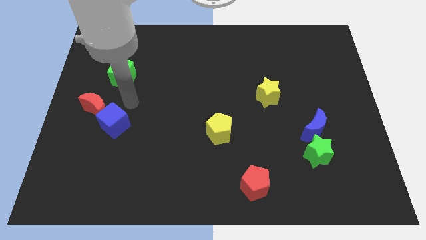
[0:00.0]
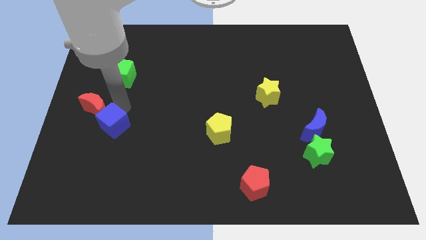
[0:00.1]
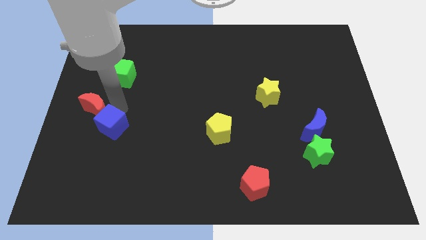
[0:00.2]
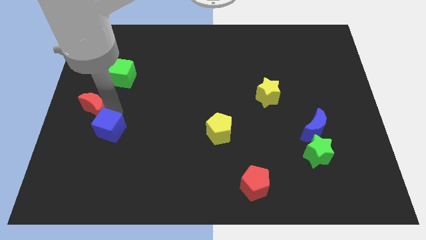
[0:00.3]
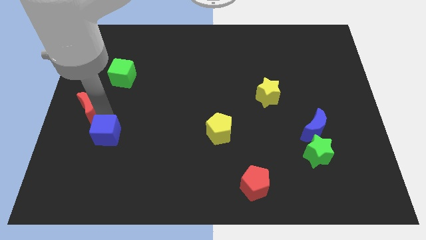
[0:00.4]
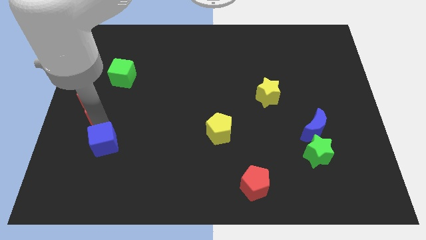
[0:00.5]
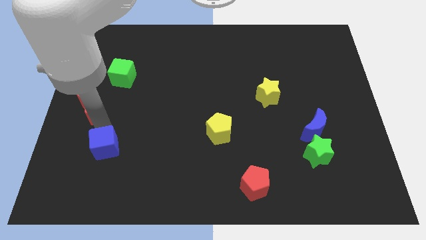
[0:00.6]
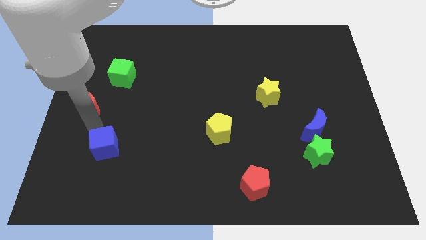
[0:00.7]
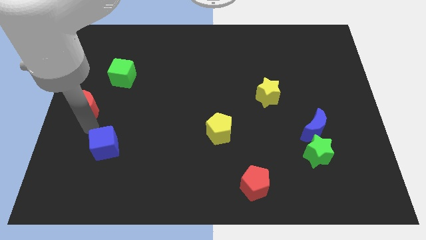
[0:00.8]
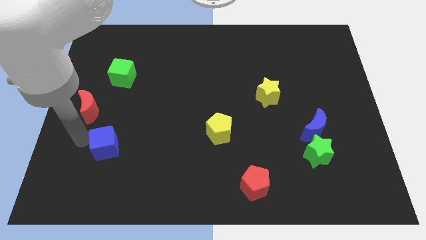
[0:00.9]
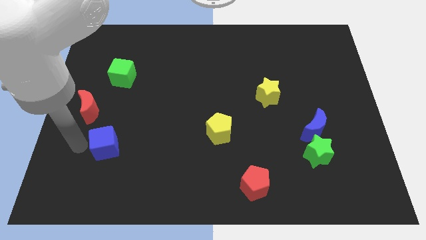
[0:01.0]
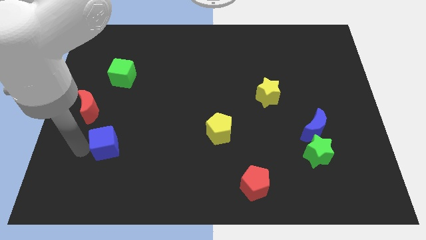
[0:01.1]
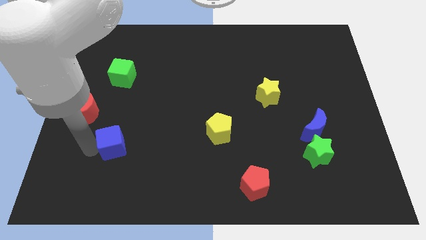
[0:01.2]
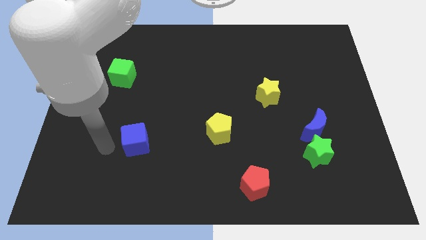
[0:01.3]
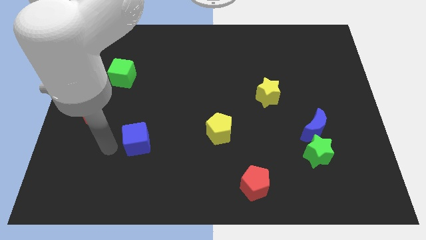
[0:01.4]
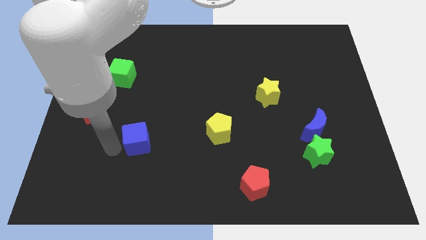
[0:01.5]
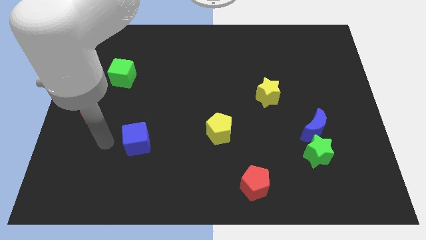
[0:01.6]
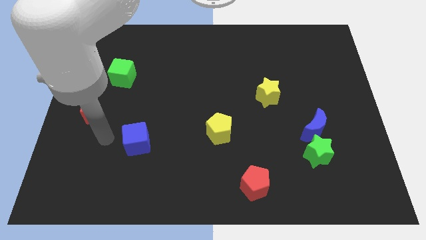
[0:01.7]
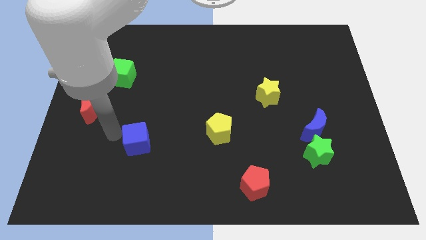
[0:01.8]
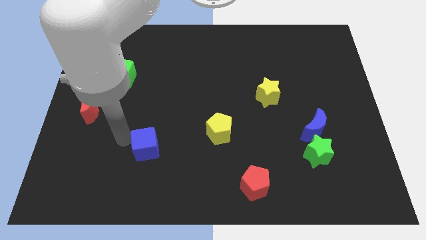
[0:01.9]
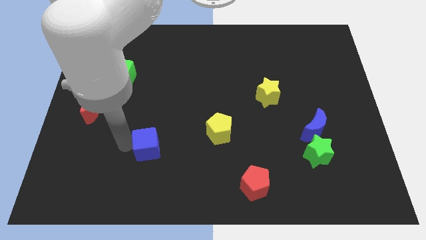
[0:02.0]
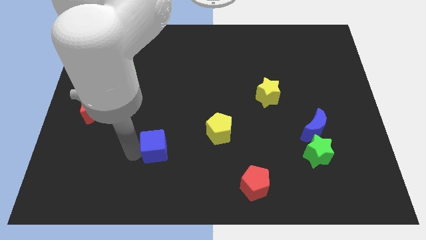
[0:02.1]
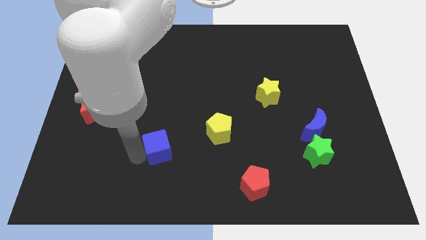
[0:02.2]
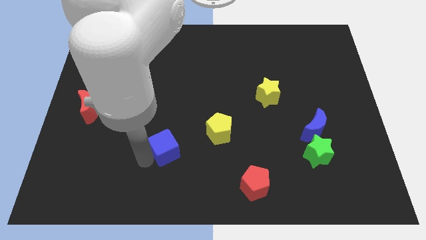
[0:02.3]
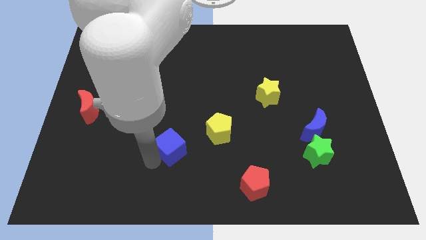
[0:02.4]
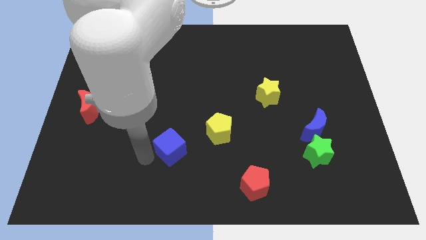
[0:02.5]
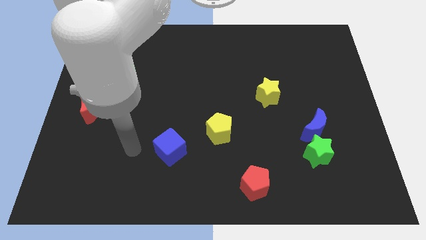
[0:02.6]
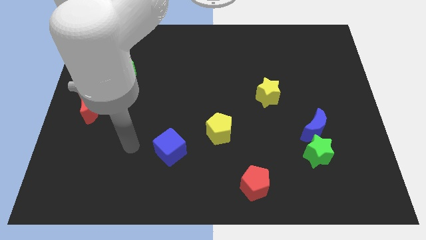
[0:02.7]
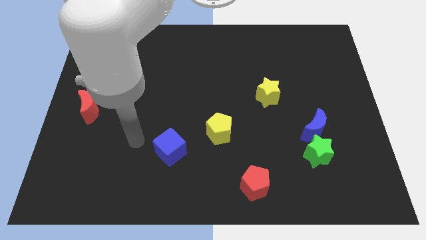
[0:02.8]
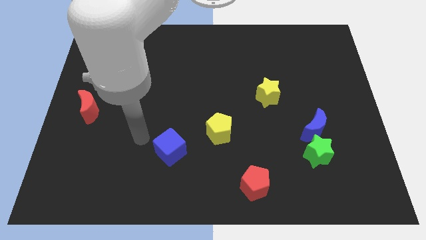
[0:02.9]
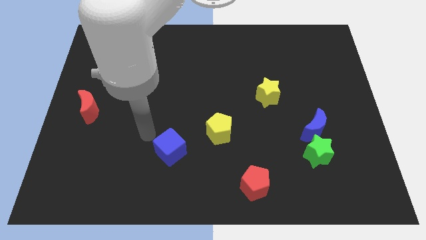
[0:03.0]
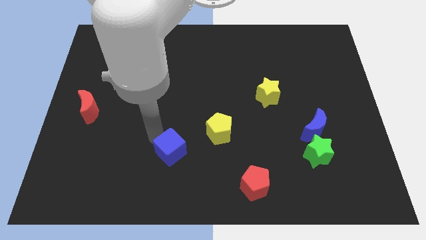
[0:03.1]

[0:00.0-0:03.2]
push blue cube around

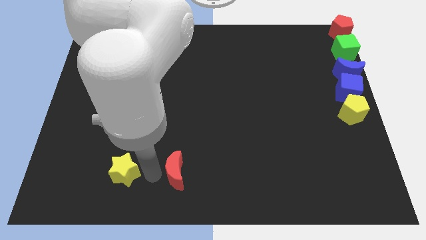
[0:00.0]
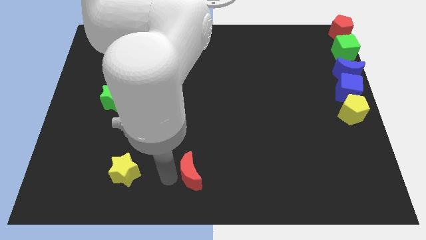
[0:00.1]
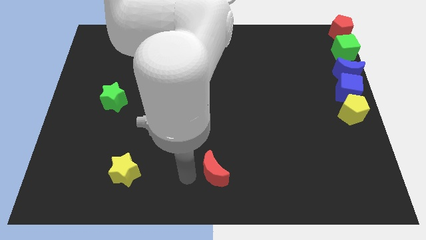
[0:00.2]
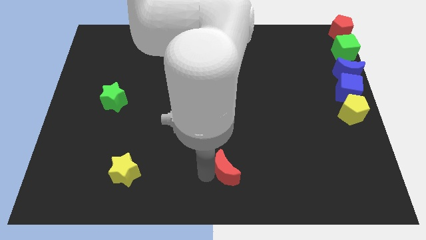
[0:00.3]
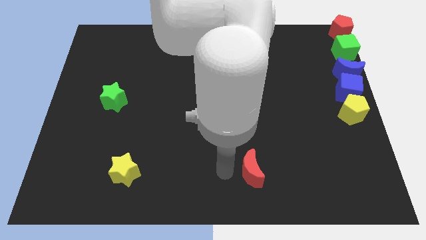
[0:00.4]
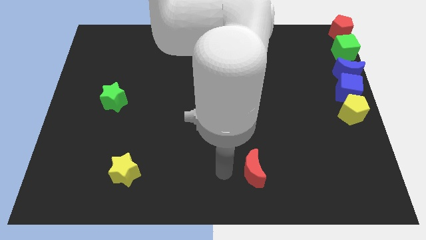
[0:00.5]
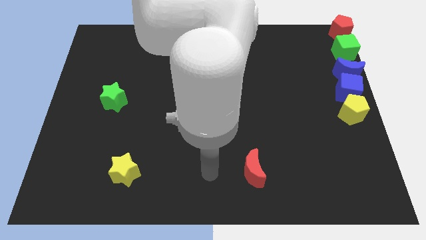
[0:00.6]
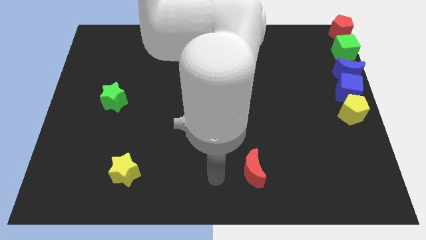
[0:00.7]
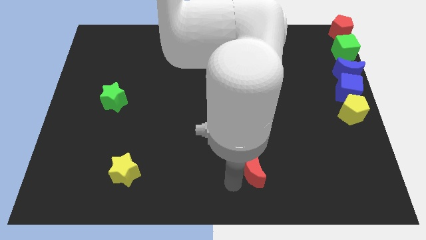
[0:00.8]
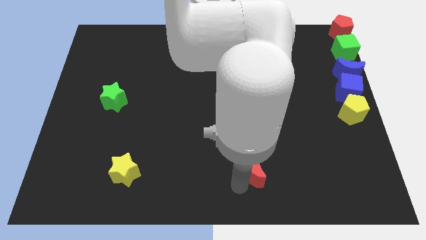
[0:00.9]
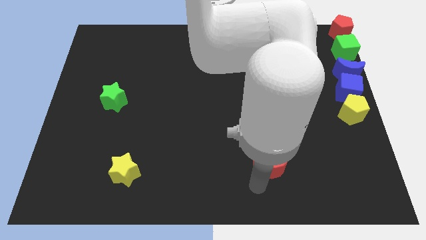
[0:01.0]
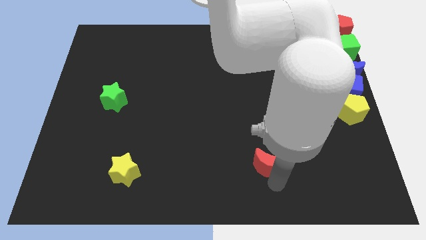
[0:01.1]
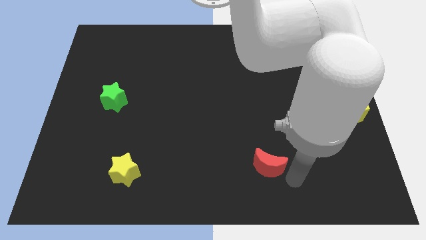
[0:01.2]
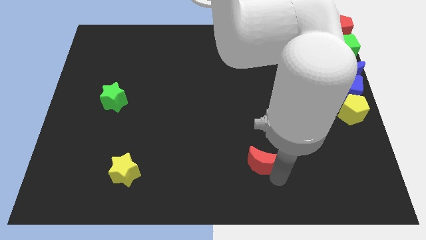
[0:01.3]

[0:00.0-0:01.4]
drag the red moon towards the right side of the board

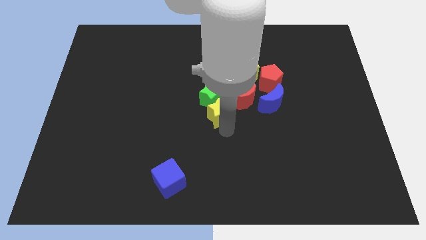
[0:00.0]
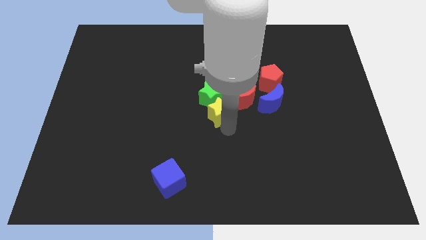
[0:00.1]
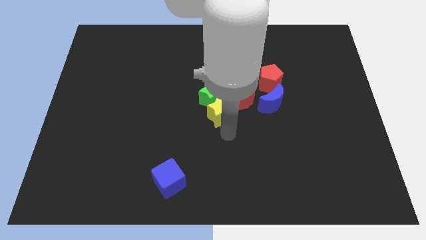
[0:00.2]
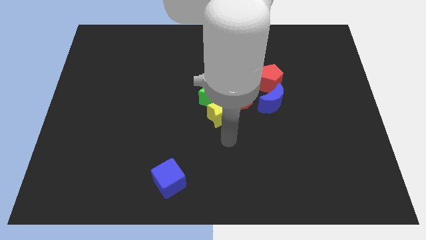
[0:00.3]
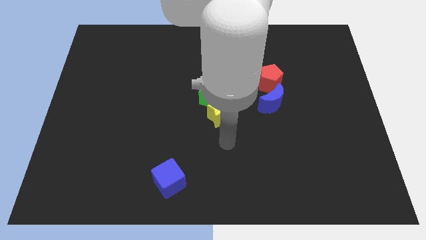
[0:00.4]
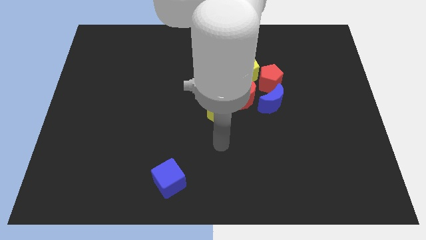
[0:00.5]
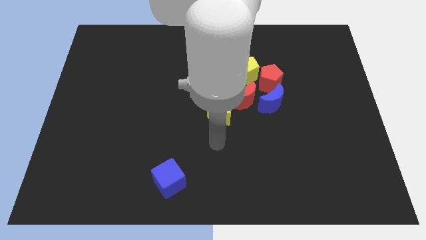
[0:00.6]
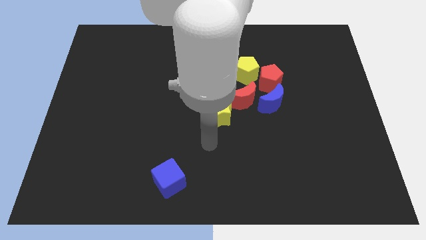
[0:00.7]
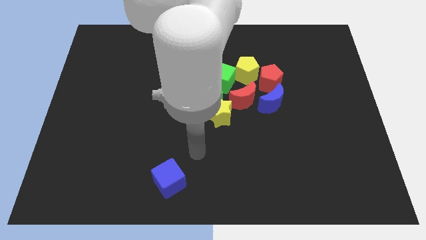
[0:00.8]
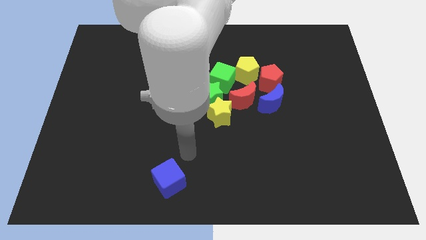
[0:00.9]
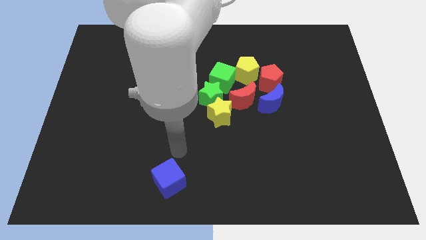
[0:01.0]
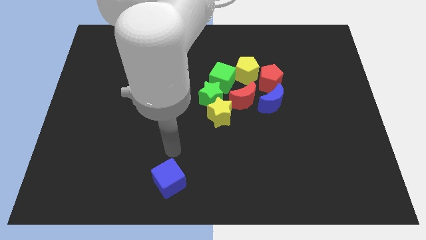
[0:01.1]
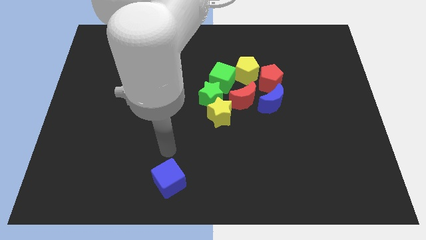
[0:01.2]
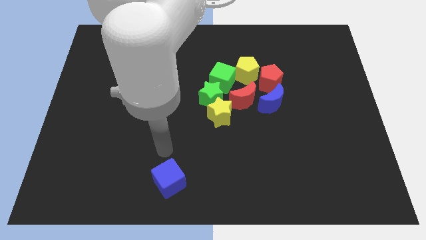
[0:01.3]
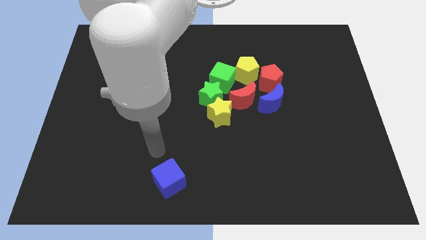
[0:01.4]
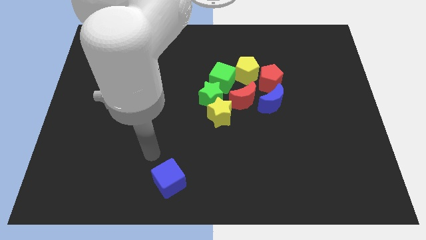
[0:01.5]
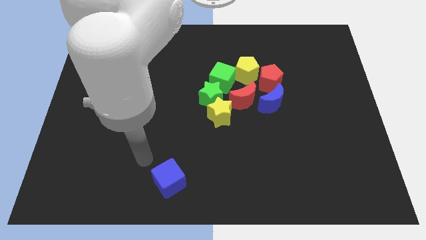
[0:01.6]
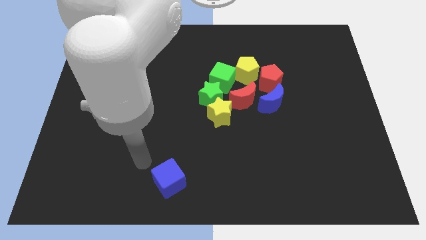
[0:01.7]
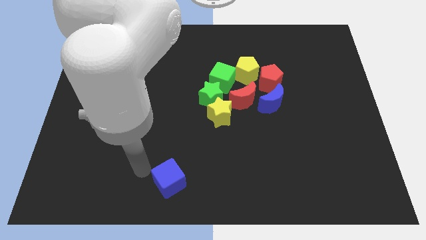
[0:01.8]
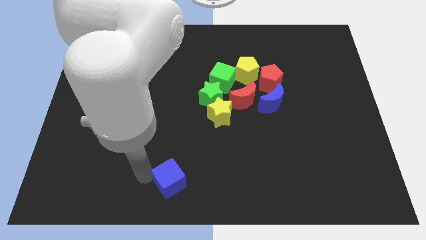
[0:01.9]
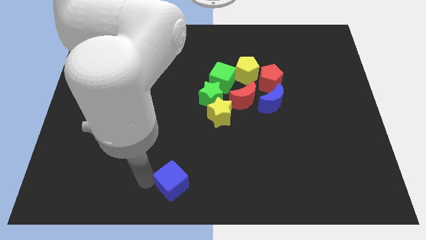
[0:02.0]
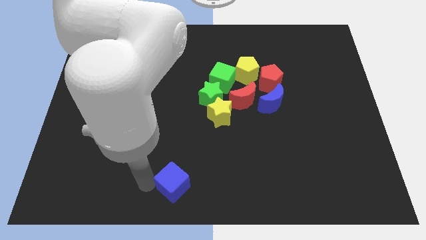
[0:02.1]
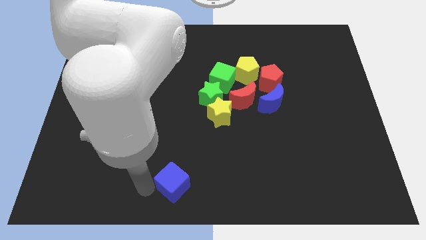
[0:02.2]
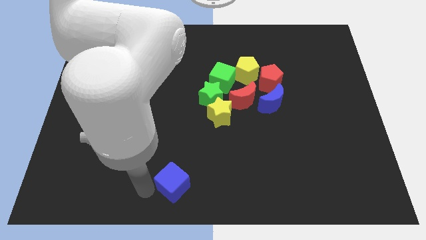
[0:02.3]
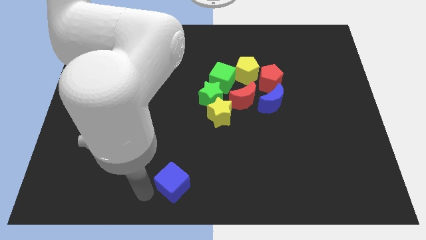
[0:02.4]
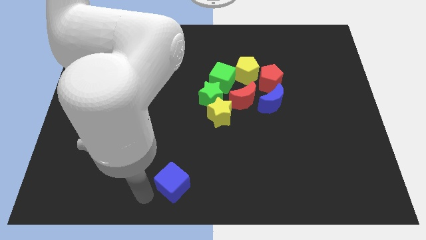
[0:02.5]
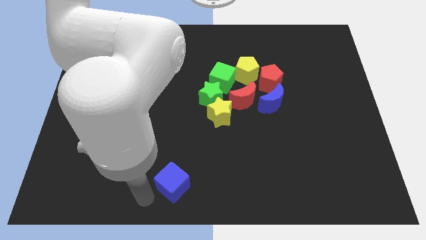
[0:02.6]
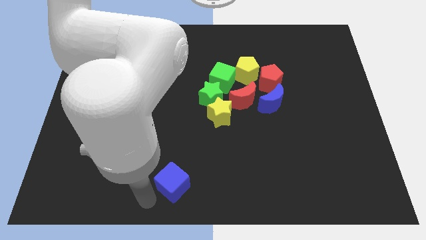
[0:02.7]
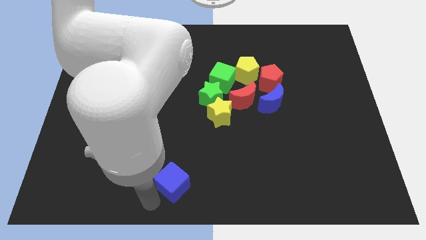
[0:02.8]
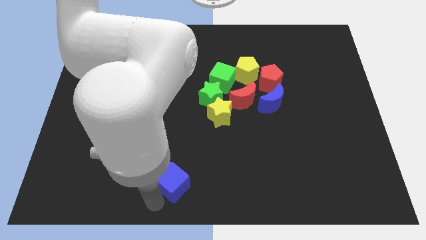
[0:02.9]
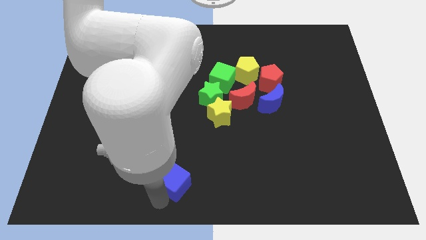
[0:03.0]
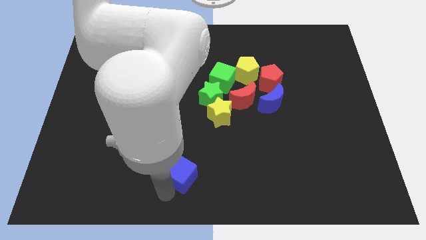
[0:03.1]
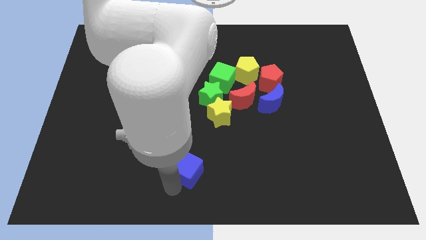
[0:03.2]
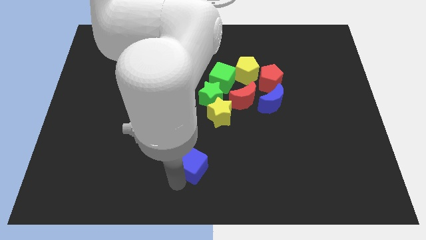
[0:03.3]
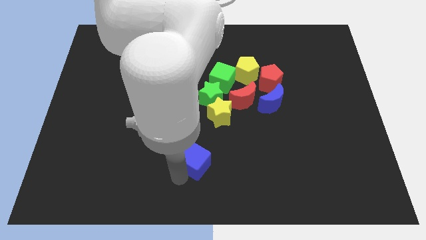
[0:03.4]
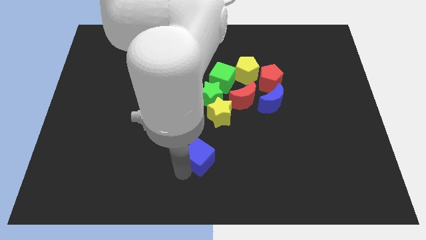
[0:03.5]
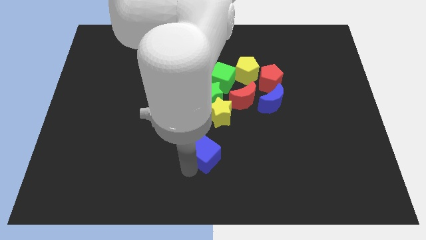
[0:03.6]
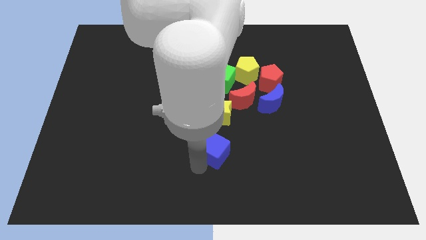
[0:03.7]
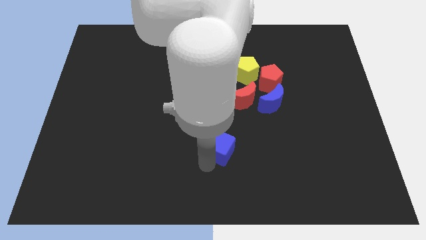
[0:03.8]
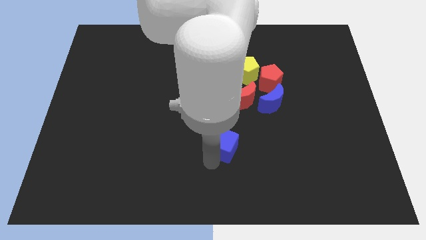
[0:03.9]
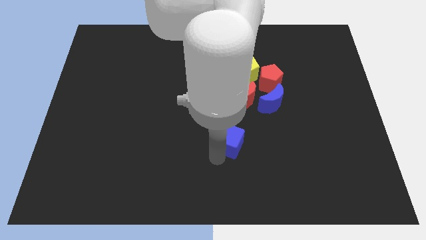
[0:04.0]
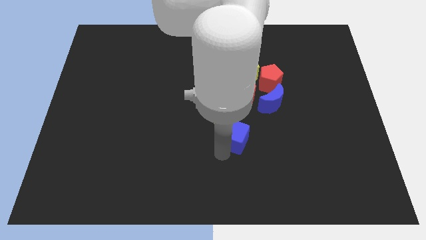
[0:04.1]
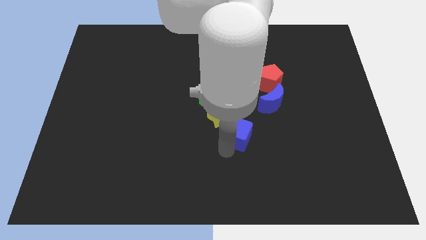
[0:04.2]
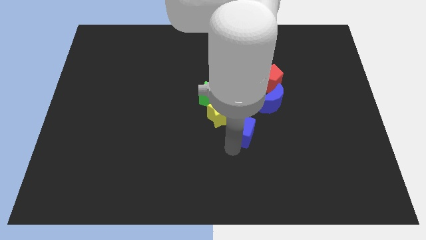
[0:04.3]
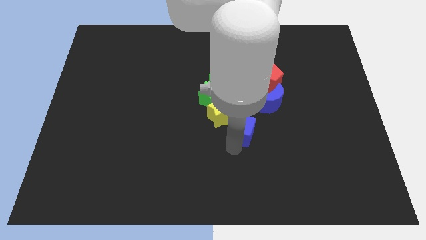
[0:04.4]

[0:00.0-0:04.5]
move the blue cube towards the group of blocks
